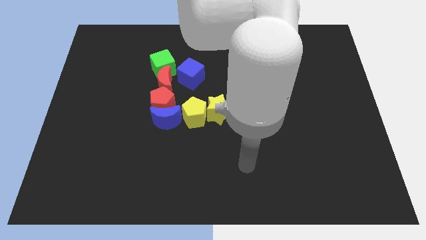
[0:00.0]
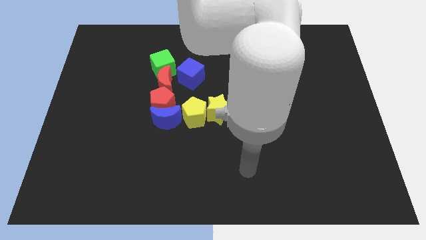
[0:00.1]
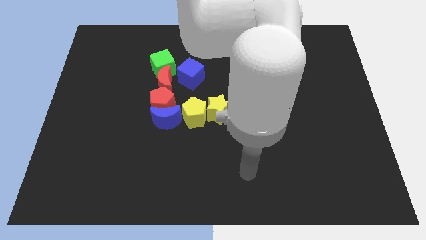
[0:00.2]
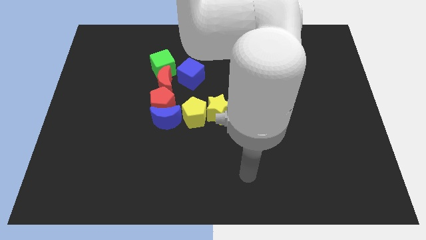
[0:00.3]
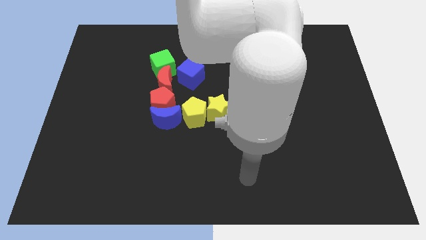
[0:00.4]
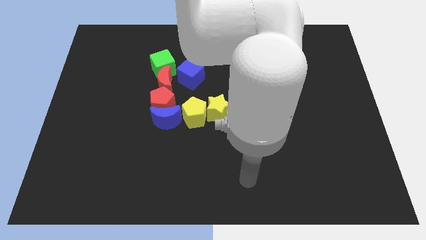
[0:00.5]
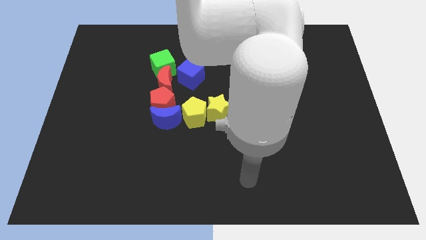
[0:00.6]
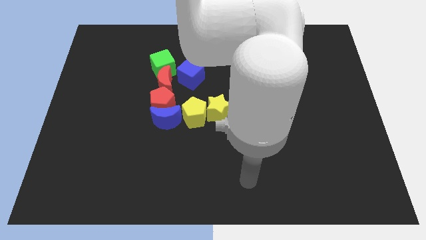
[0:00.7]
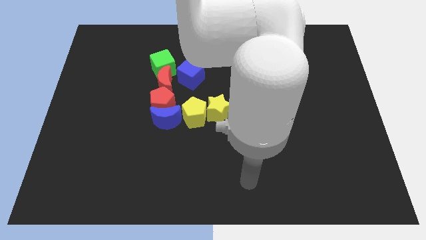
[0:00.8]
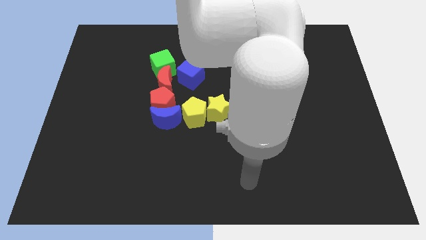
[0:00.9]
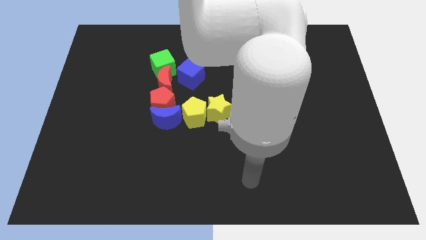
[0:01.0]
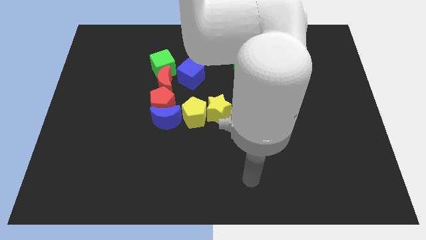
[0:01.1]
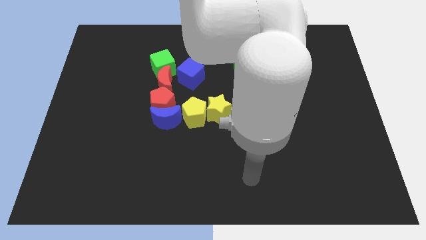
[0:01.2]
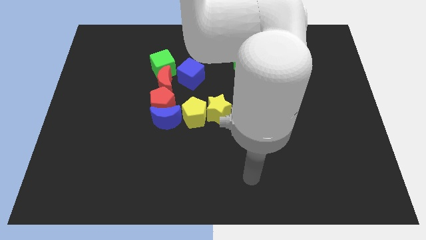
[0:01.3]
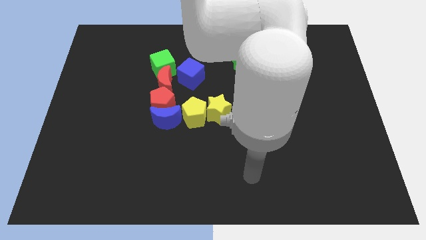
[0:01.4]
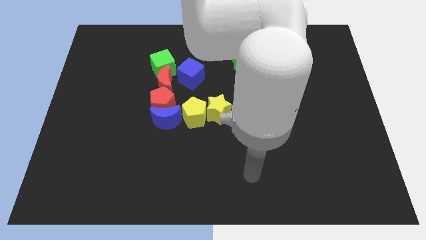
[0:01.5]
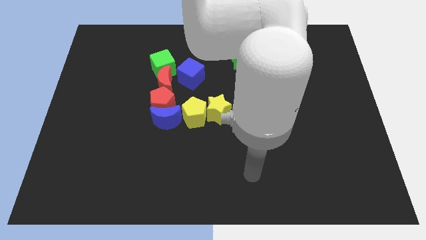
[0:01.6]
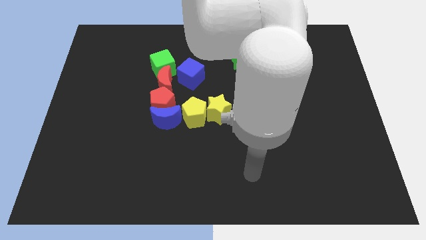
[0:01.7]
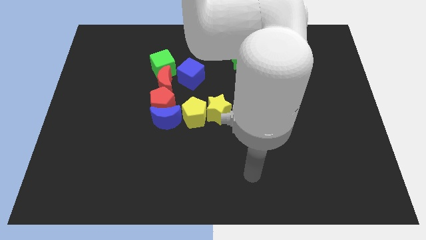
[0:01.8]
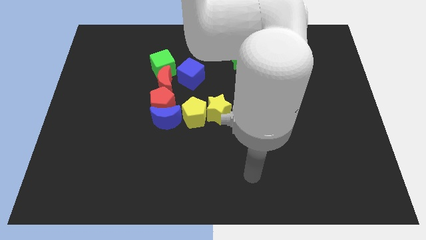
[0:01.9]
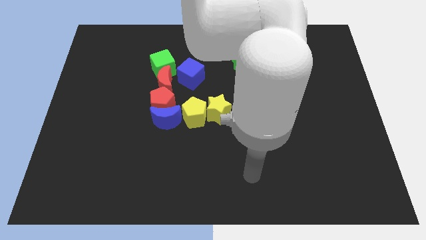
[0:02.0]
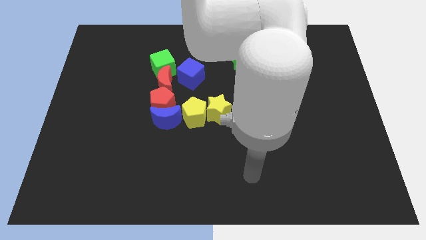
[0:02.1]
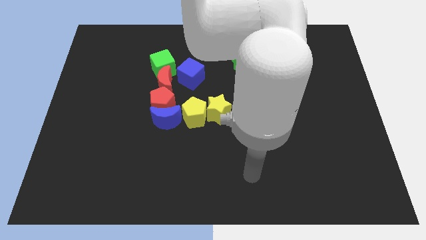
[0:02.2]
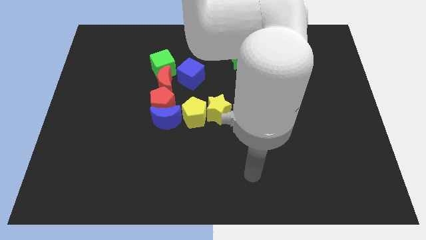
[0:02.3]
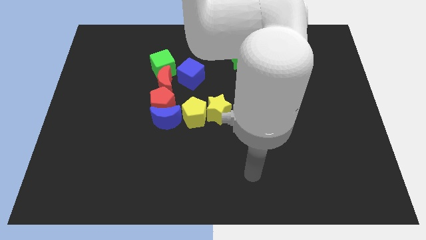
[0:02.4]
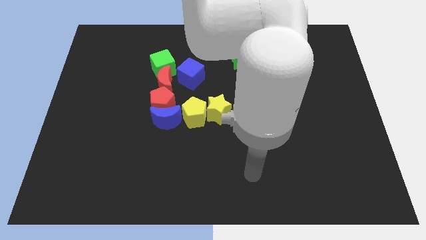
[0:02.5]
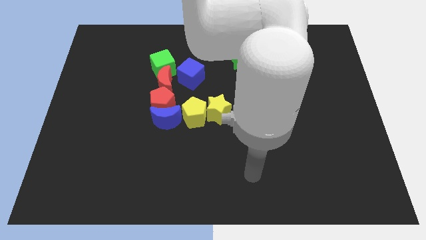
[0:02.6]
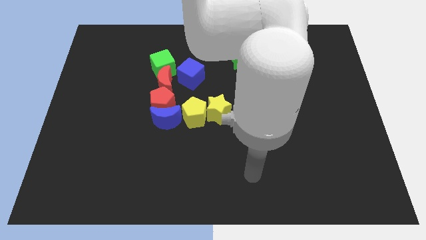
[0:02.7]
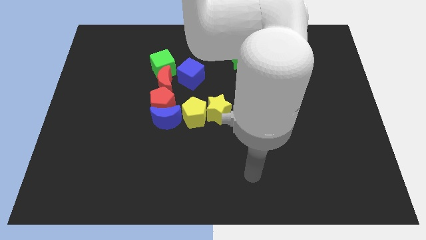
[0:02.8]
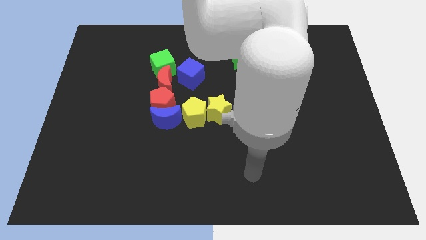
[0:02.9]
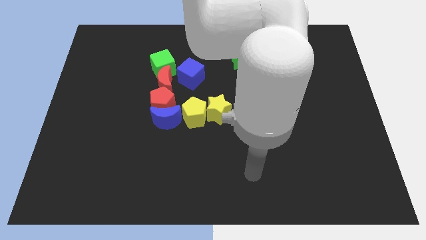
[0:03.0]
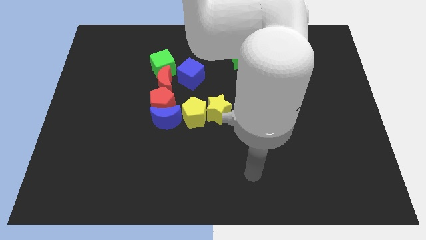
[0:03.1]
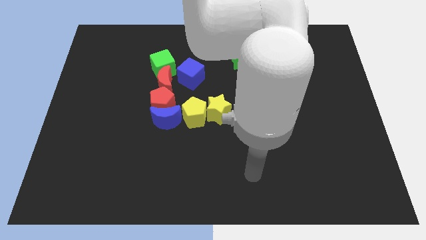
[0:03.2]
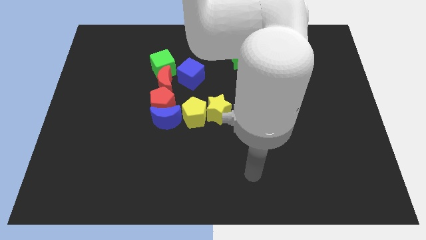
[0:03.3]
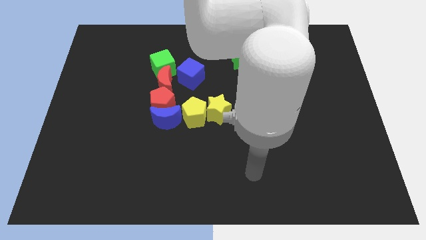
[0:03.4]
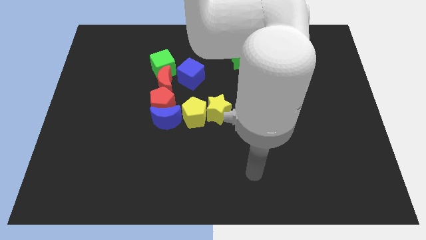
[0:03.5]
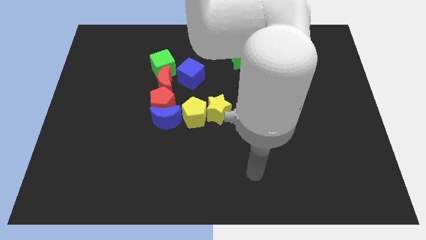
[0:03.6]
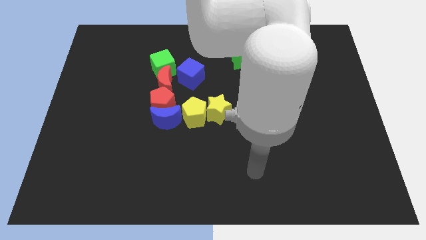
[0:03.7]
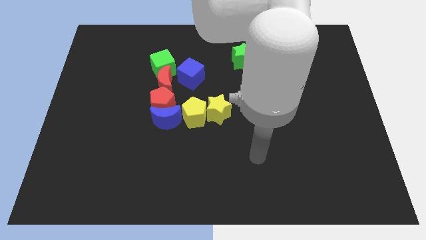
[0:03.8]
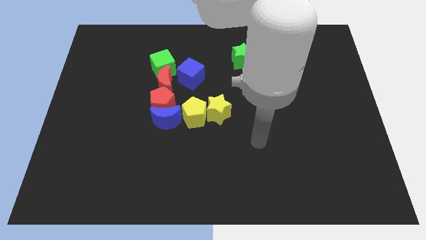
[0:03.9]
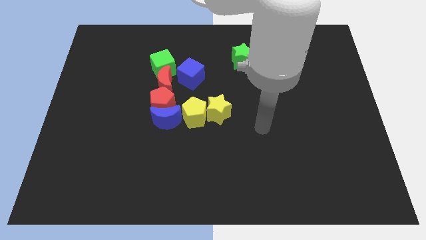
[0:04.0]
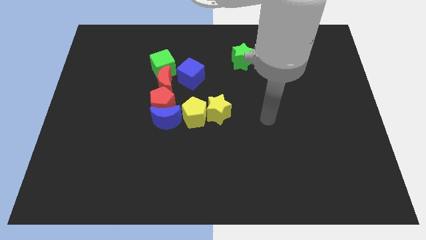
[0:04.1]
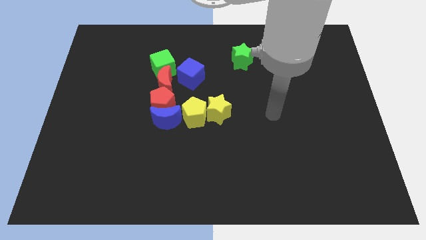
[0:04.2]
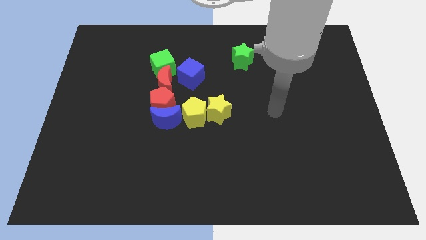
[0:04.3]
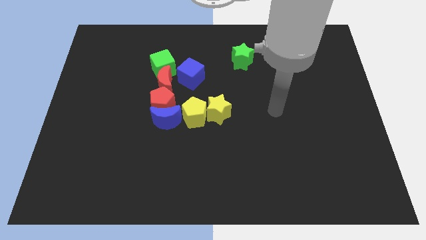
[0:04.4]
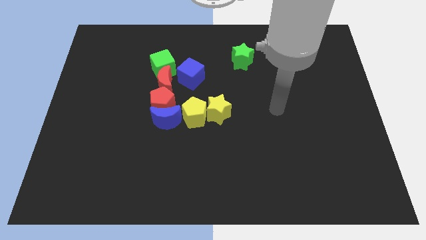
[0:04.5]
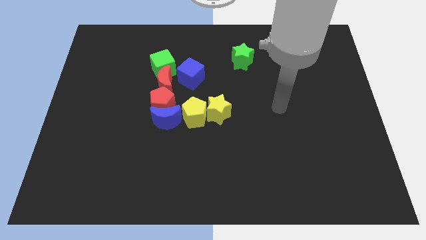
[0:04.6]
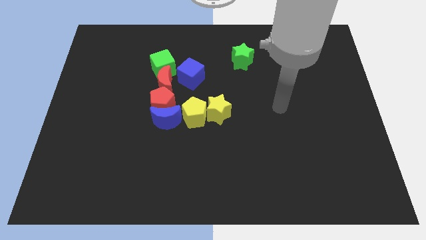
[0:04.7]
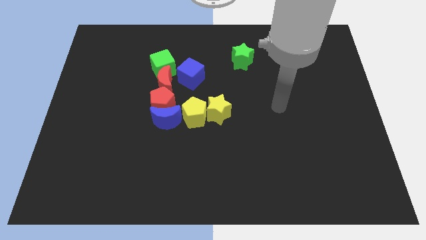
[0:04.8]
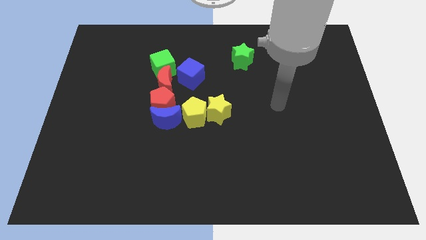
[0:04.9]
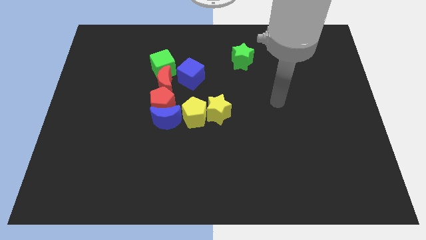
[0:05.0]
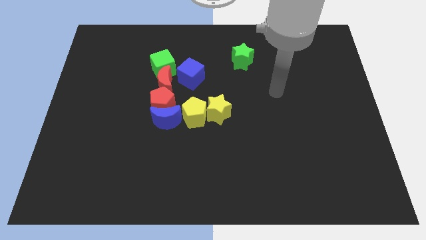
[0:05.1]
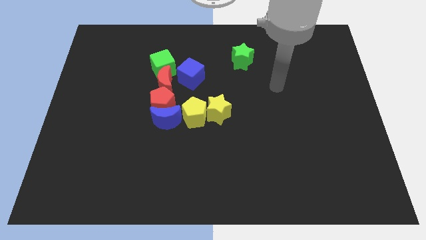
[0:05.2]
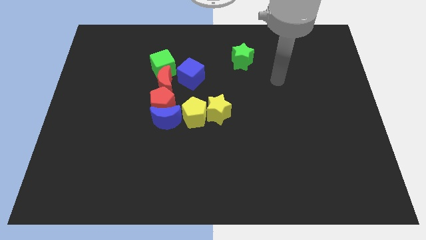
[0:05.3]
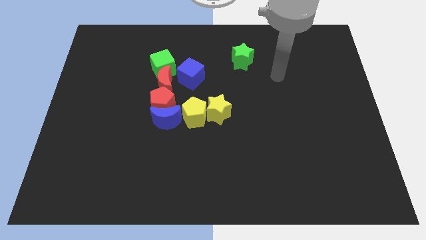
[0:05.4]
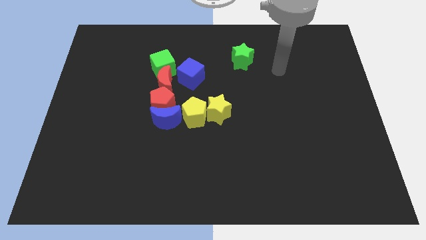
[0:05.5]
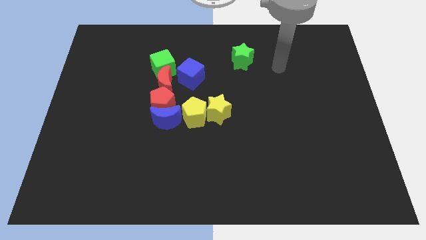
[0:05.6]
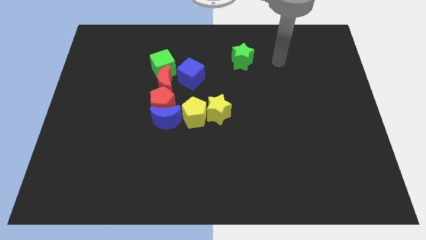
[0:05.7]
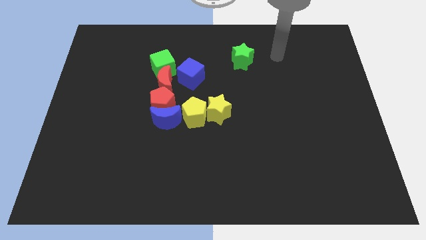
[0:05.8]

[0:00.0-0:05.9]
point your arm at the right side of the green star

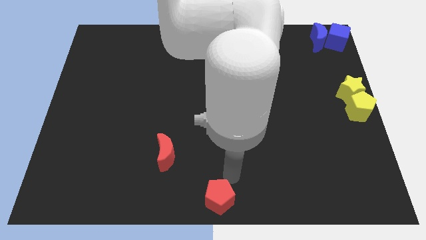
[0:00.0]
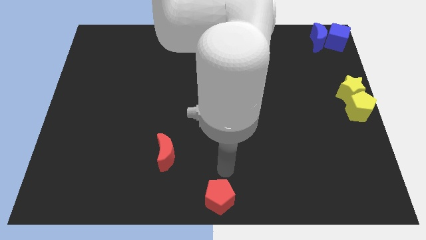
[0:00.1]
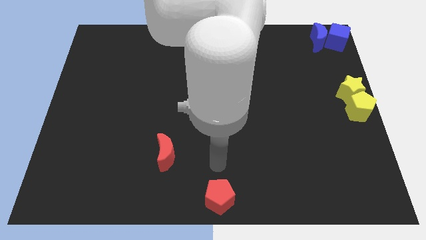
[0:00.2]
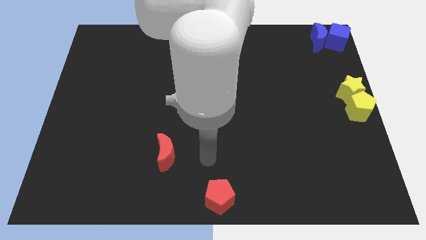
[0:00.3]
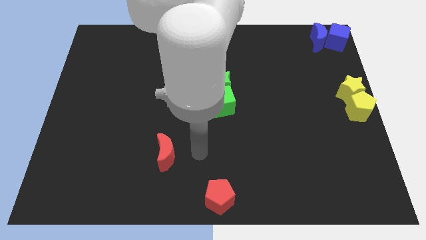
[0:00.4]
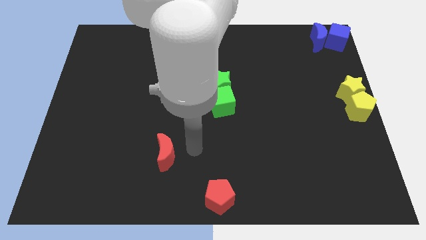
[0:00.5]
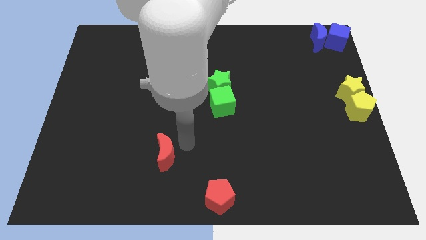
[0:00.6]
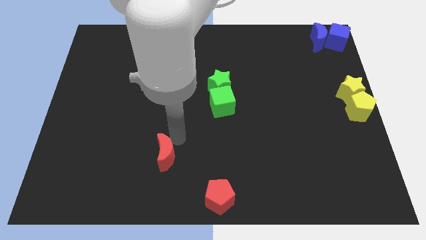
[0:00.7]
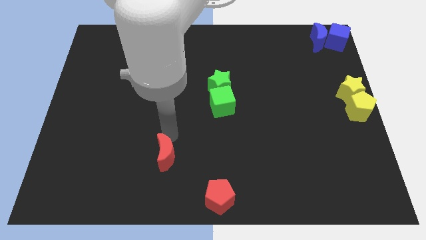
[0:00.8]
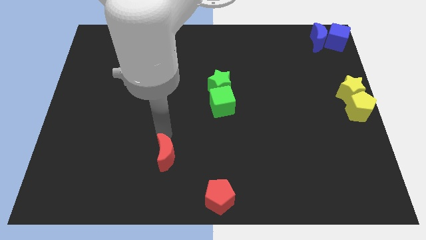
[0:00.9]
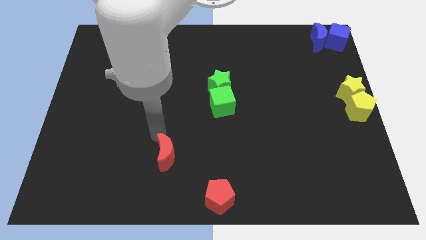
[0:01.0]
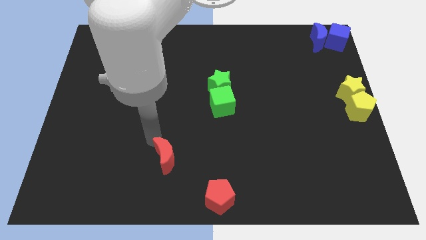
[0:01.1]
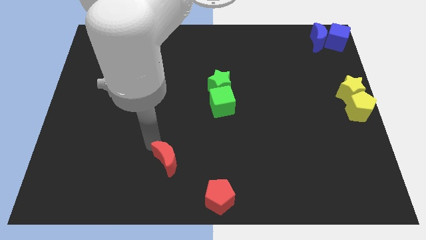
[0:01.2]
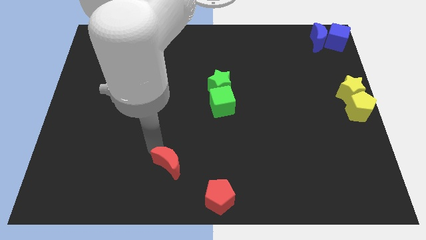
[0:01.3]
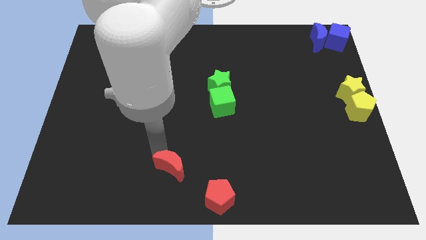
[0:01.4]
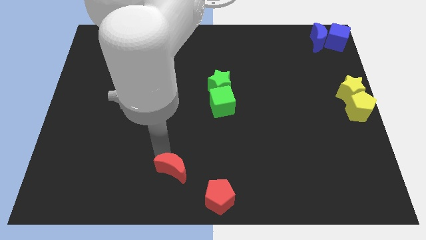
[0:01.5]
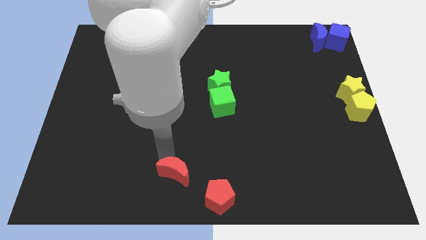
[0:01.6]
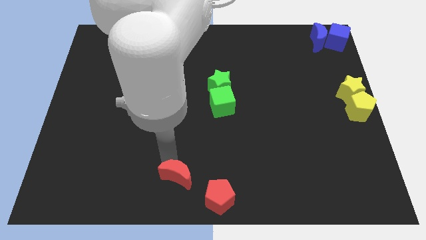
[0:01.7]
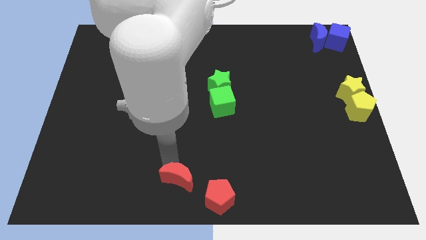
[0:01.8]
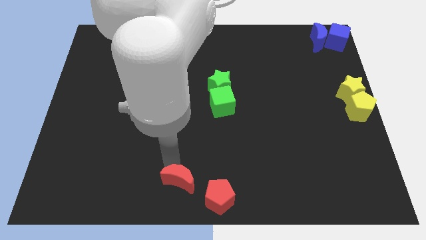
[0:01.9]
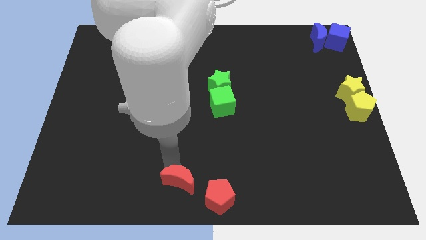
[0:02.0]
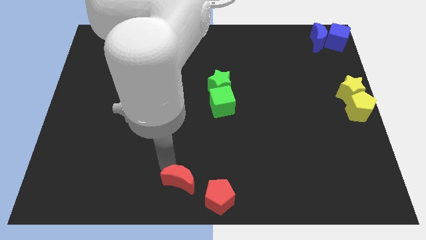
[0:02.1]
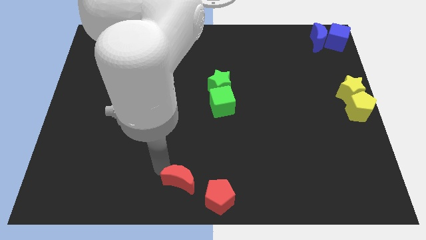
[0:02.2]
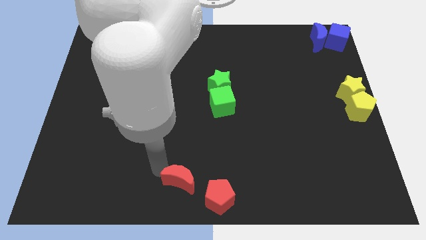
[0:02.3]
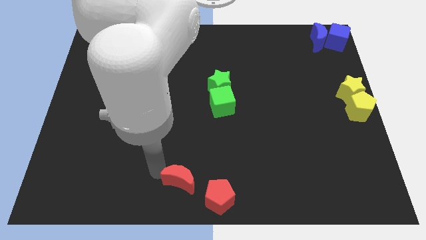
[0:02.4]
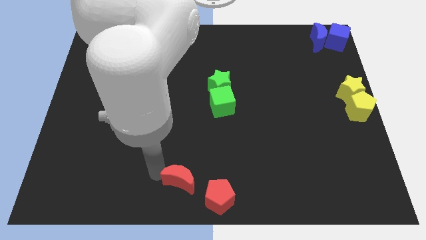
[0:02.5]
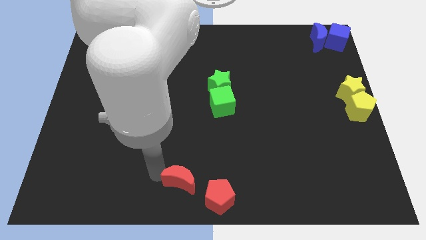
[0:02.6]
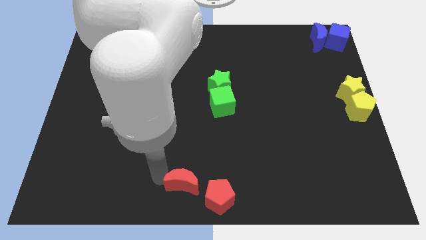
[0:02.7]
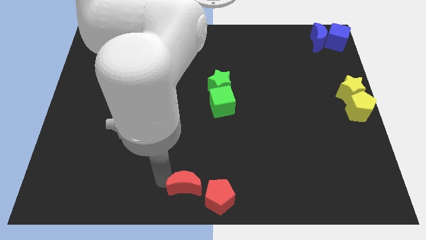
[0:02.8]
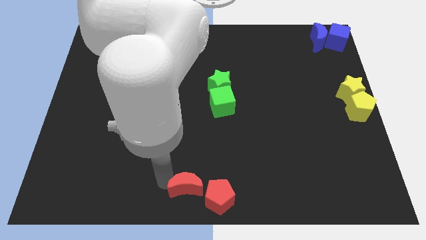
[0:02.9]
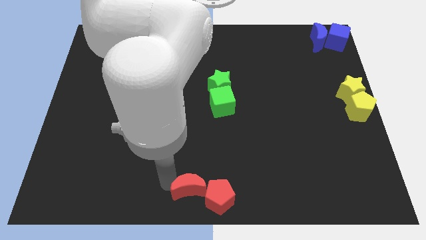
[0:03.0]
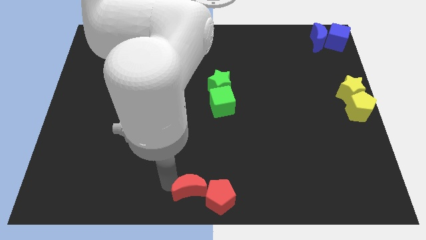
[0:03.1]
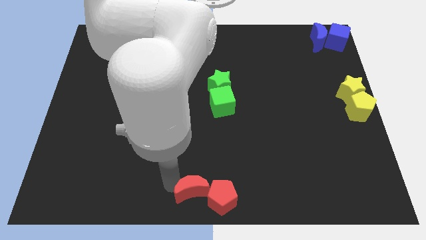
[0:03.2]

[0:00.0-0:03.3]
move red crescent into red pentagon
